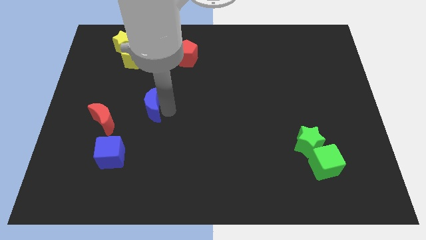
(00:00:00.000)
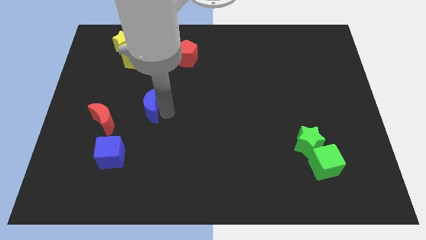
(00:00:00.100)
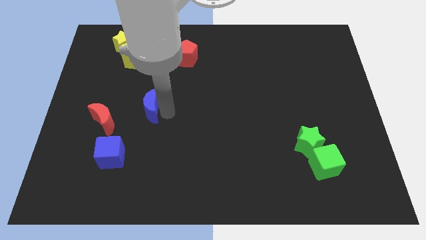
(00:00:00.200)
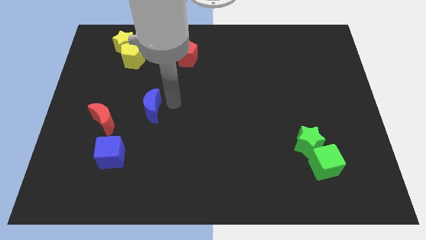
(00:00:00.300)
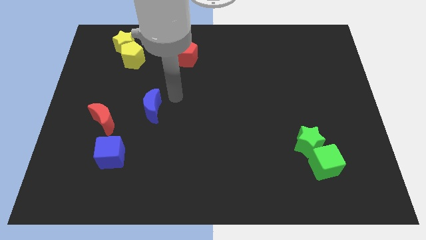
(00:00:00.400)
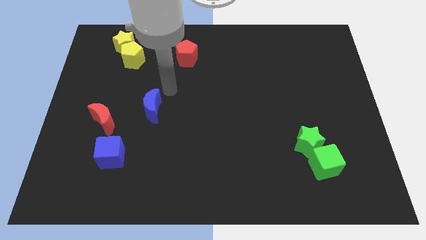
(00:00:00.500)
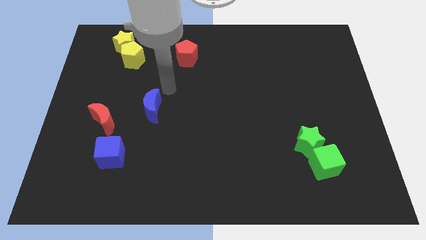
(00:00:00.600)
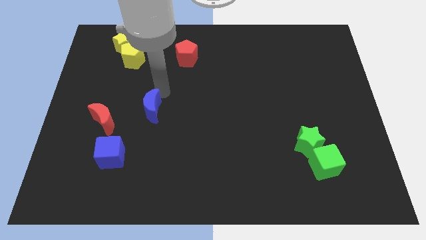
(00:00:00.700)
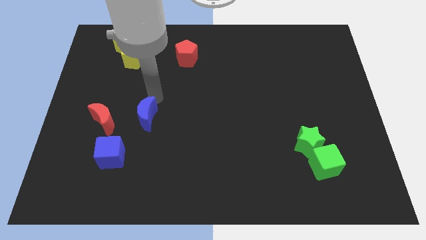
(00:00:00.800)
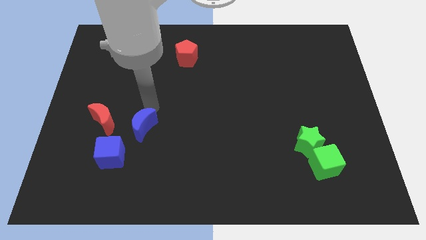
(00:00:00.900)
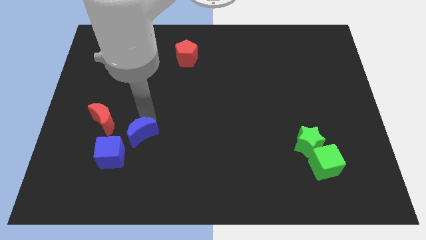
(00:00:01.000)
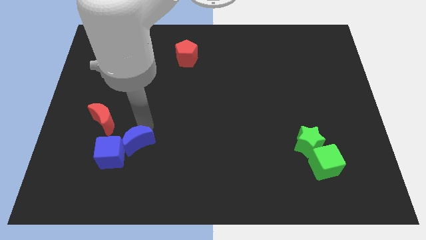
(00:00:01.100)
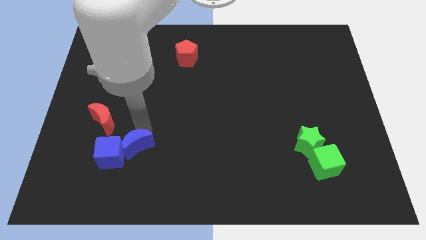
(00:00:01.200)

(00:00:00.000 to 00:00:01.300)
place the blue moon to the right side of the blue cube

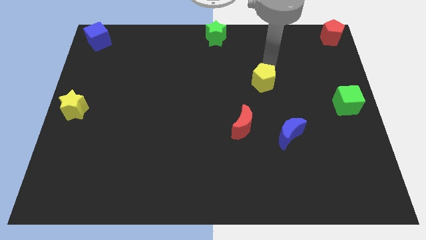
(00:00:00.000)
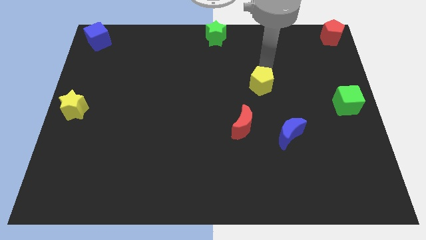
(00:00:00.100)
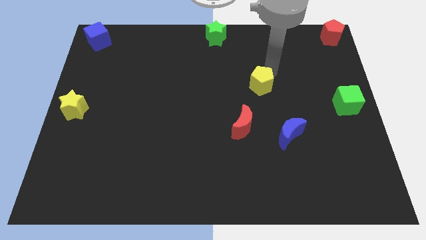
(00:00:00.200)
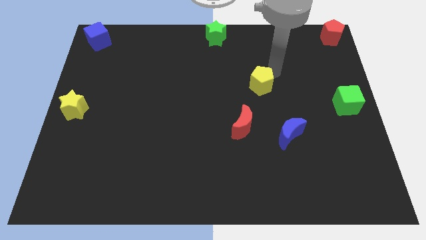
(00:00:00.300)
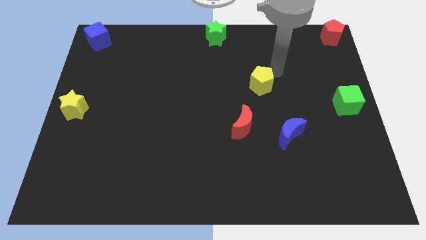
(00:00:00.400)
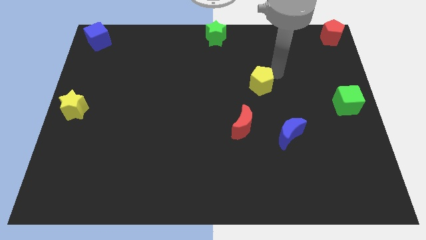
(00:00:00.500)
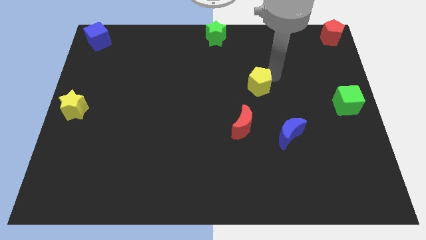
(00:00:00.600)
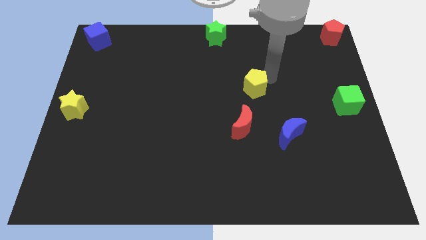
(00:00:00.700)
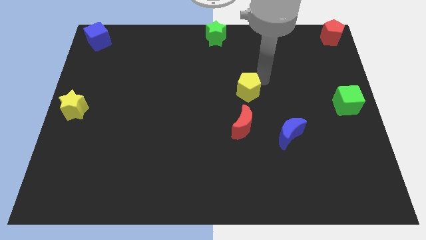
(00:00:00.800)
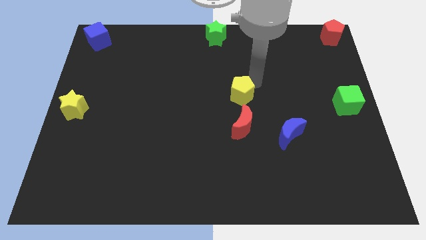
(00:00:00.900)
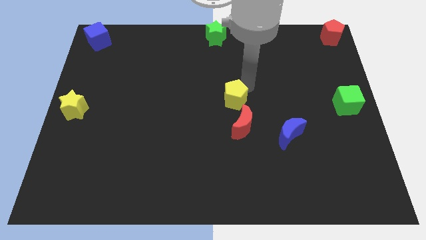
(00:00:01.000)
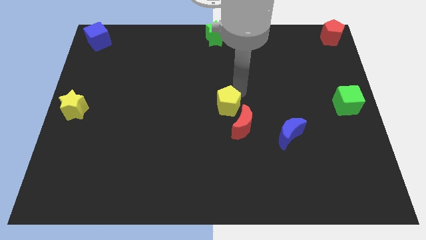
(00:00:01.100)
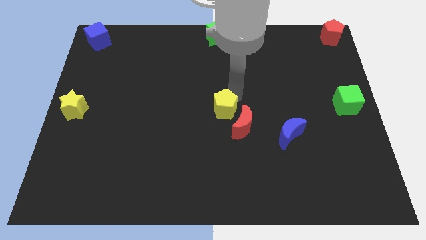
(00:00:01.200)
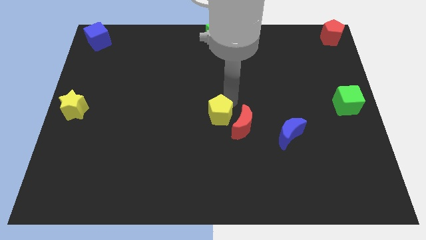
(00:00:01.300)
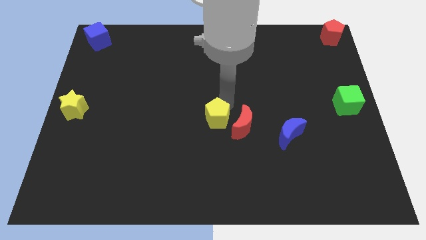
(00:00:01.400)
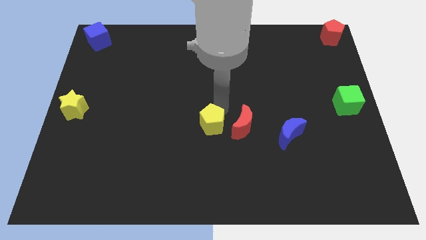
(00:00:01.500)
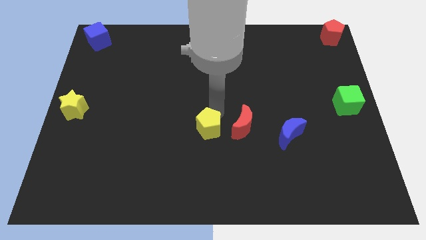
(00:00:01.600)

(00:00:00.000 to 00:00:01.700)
place the yellow pentagon to the left of the red moon

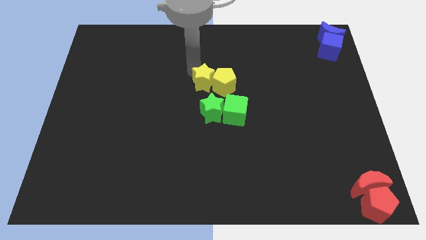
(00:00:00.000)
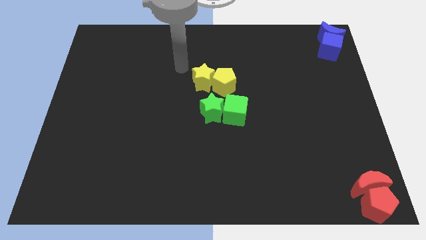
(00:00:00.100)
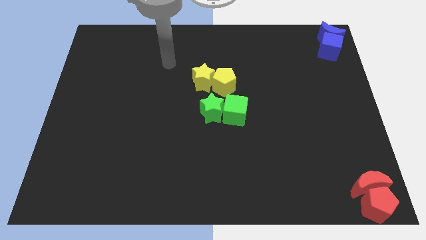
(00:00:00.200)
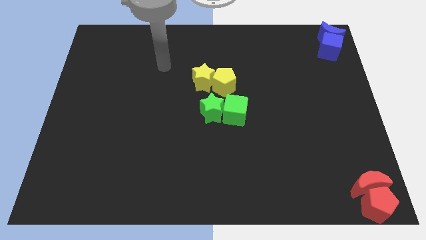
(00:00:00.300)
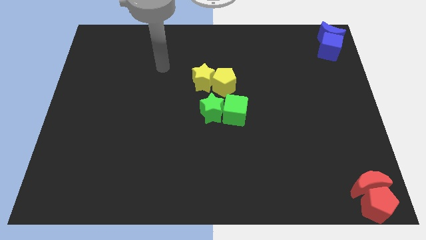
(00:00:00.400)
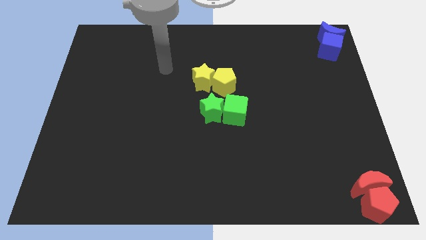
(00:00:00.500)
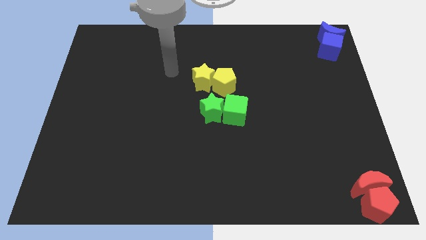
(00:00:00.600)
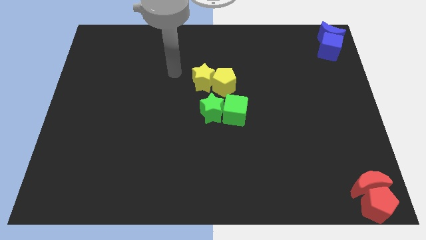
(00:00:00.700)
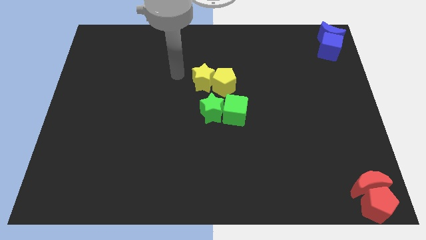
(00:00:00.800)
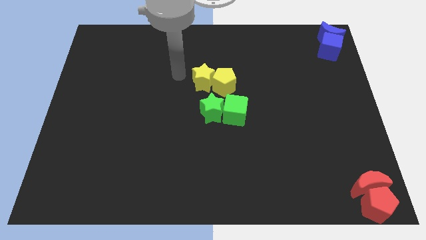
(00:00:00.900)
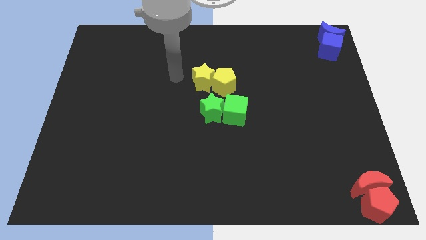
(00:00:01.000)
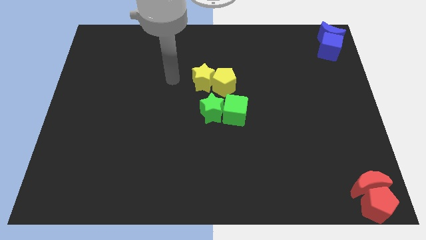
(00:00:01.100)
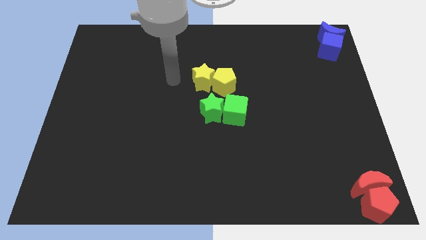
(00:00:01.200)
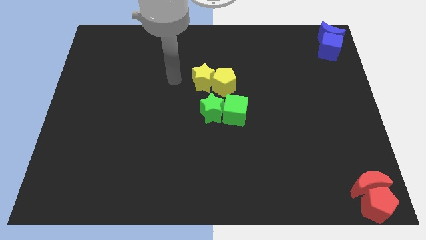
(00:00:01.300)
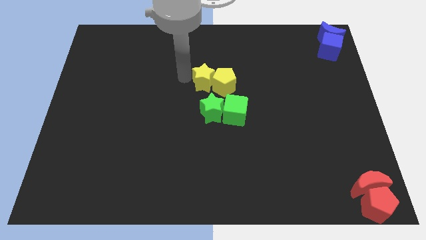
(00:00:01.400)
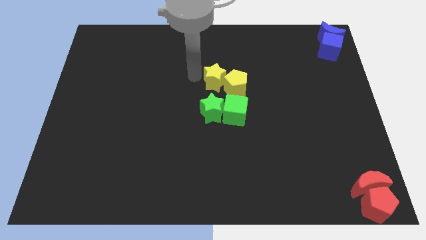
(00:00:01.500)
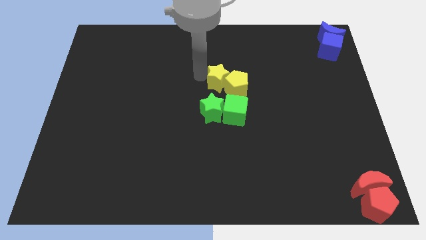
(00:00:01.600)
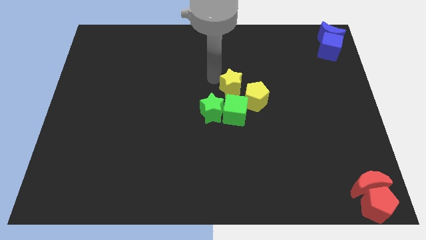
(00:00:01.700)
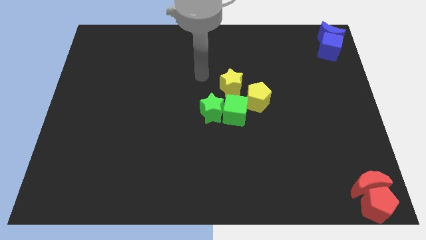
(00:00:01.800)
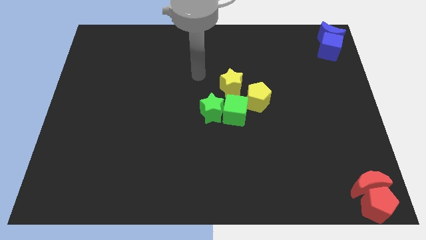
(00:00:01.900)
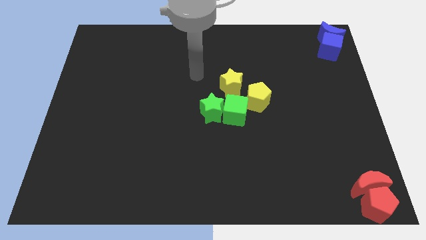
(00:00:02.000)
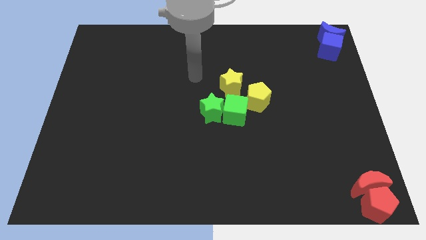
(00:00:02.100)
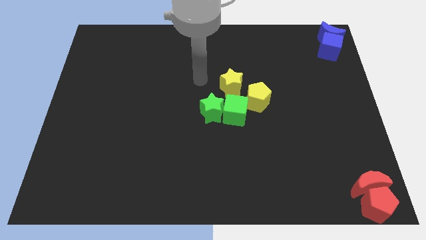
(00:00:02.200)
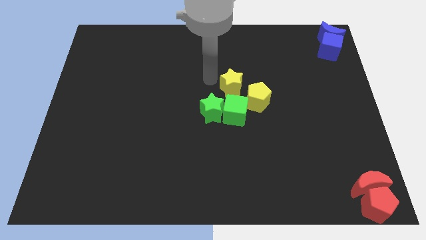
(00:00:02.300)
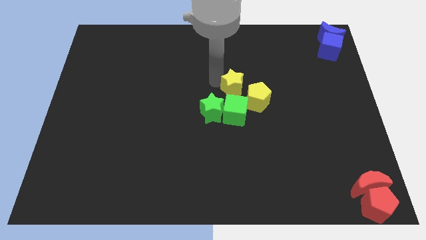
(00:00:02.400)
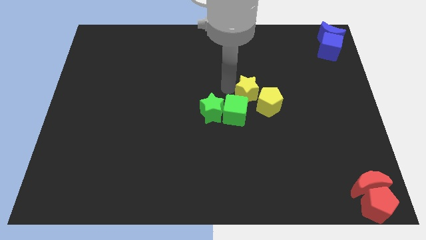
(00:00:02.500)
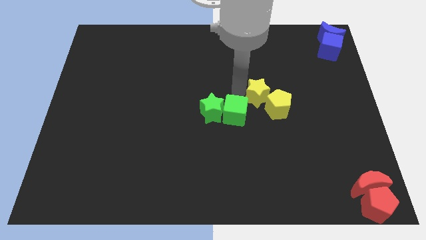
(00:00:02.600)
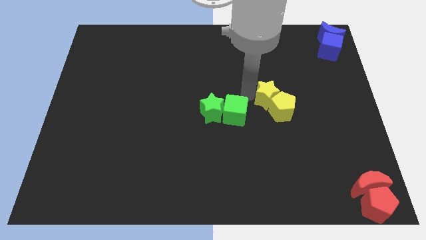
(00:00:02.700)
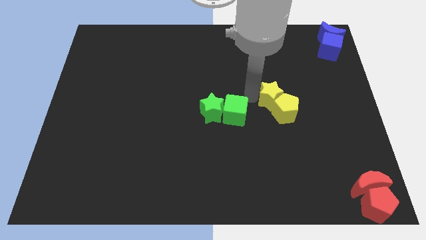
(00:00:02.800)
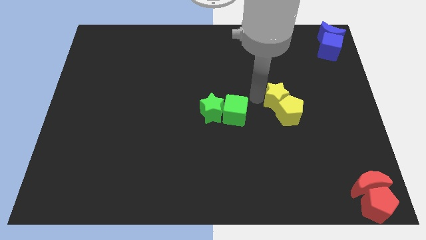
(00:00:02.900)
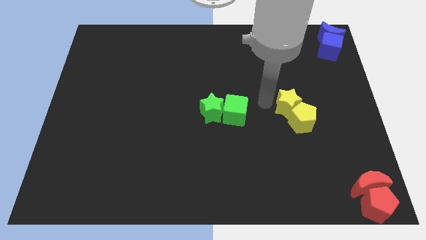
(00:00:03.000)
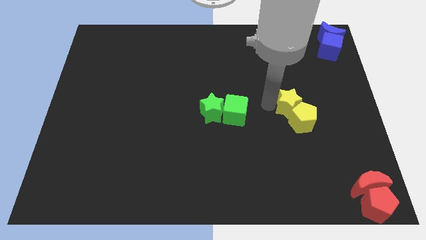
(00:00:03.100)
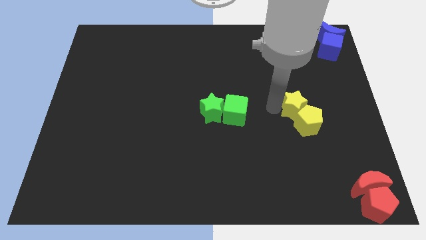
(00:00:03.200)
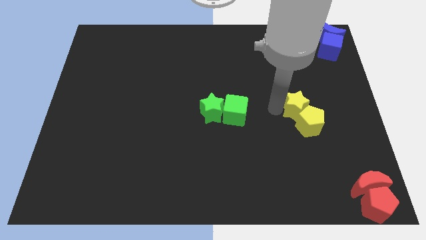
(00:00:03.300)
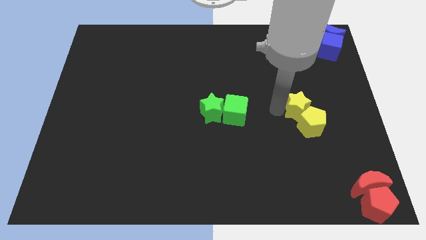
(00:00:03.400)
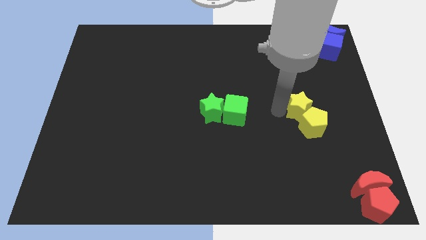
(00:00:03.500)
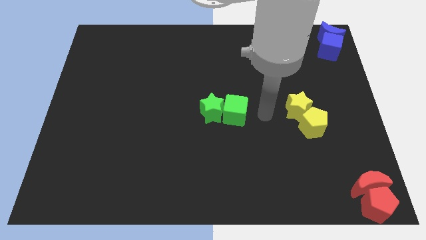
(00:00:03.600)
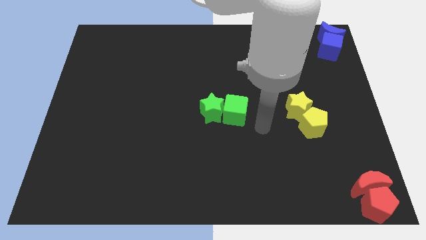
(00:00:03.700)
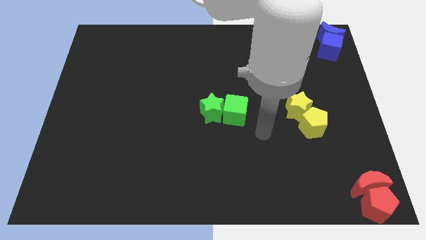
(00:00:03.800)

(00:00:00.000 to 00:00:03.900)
push the yellow blocks to the right side of the table

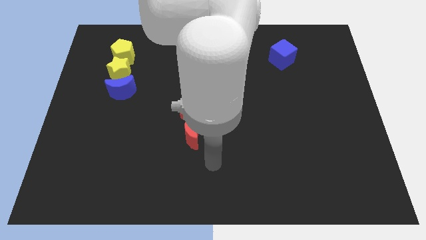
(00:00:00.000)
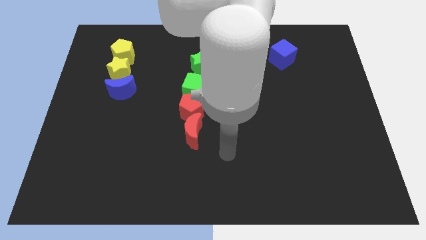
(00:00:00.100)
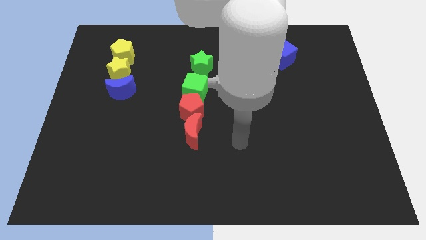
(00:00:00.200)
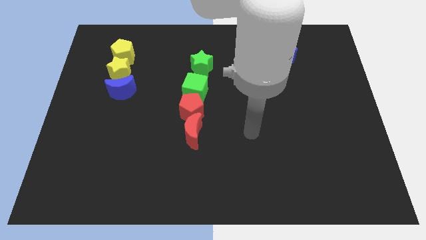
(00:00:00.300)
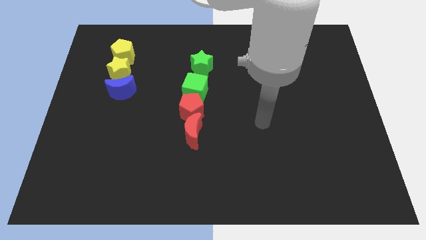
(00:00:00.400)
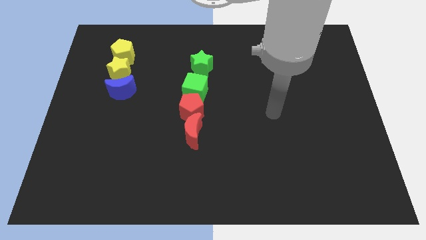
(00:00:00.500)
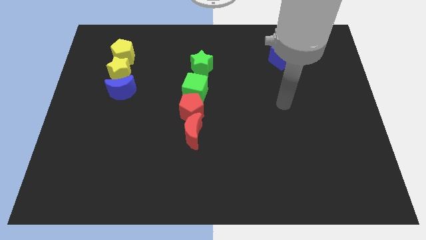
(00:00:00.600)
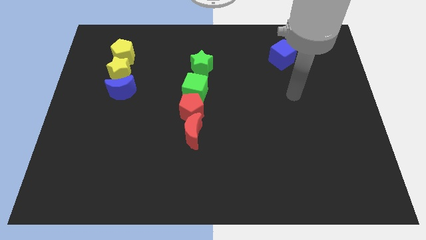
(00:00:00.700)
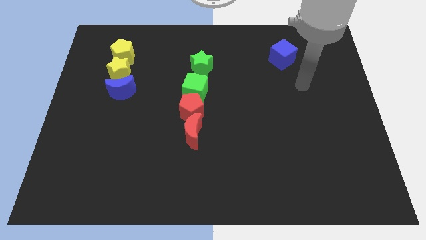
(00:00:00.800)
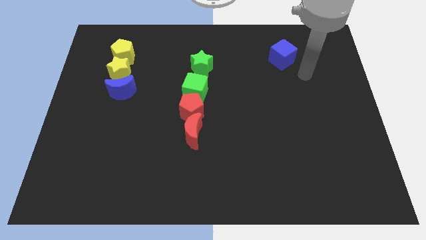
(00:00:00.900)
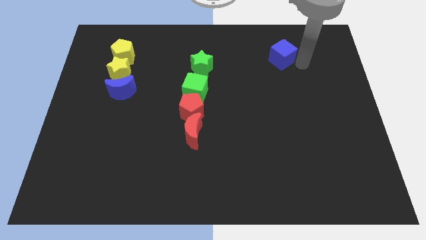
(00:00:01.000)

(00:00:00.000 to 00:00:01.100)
place your arm to the right of the blue cube

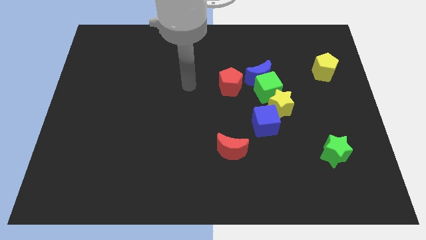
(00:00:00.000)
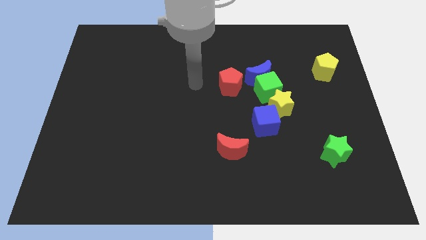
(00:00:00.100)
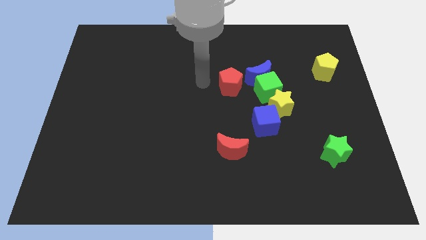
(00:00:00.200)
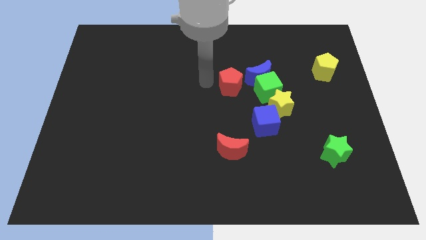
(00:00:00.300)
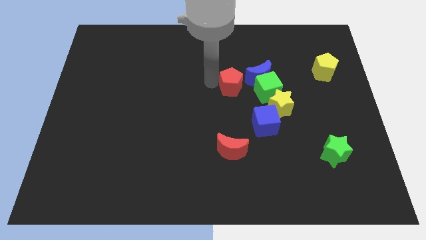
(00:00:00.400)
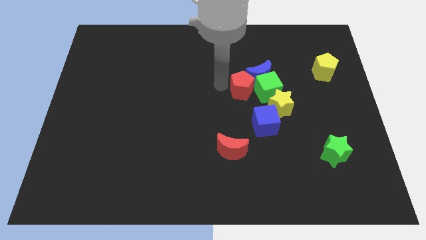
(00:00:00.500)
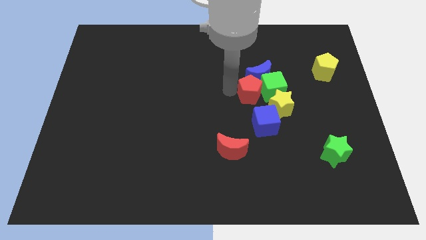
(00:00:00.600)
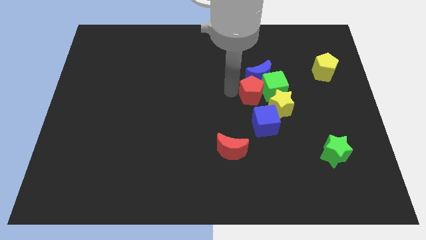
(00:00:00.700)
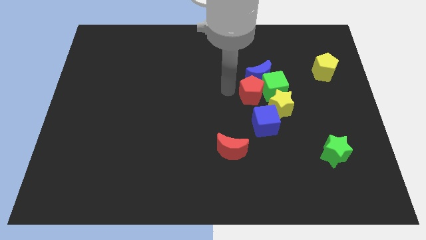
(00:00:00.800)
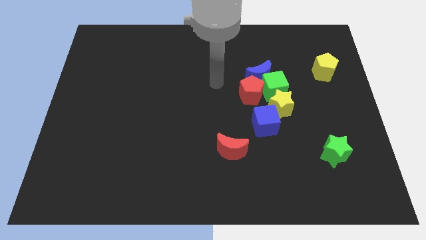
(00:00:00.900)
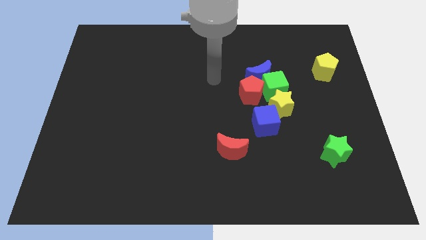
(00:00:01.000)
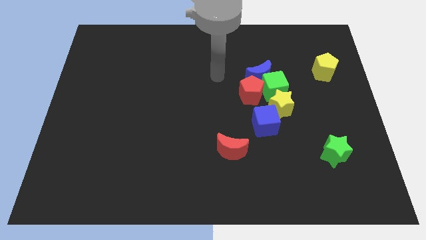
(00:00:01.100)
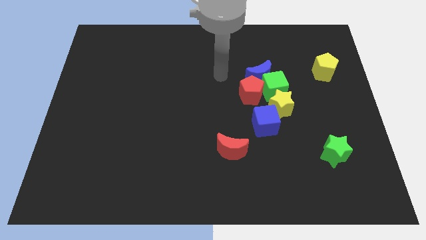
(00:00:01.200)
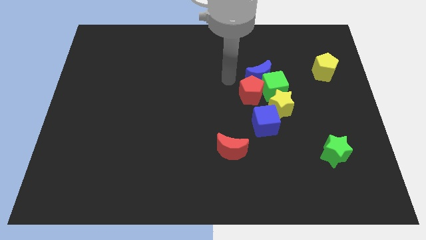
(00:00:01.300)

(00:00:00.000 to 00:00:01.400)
put the red pentagon into the green cube
